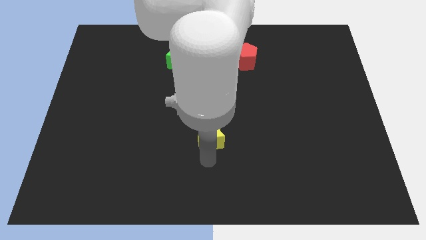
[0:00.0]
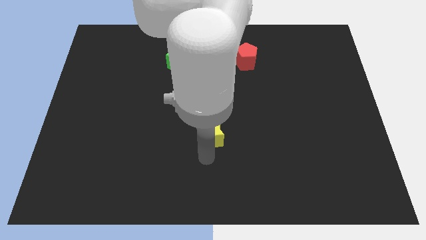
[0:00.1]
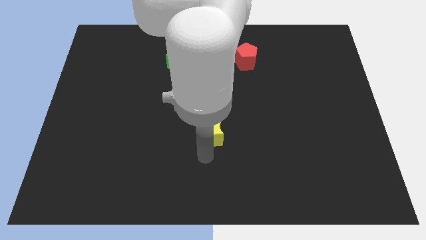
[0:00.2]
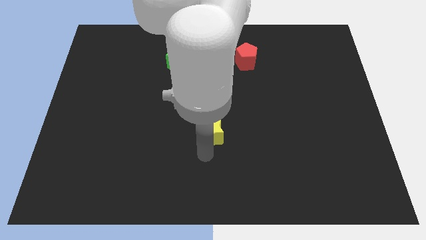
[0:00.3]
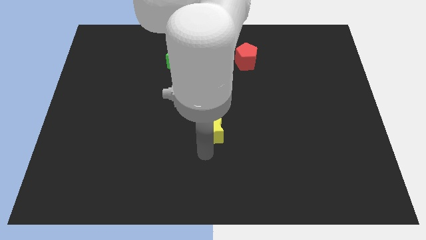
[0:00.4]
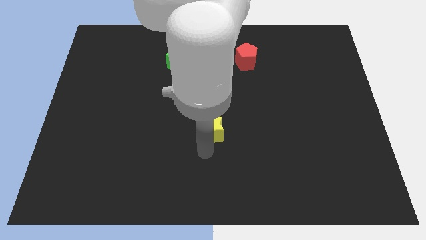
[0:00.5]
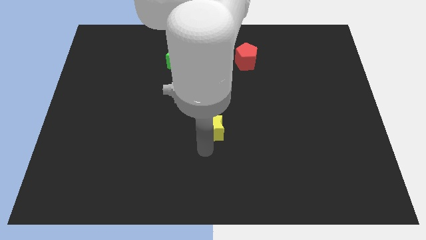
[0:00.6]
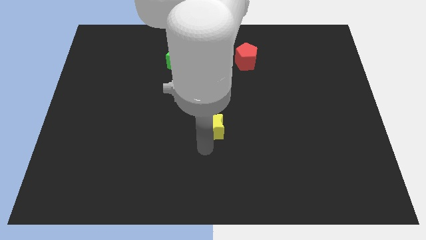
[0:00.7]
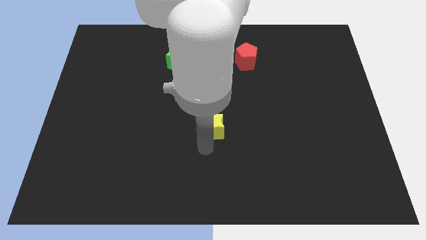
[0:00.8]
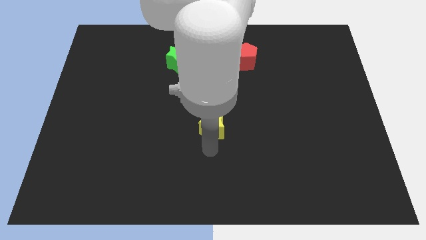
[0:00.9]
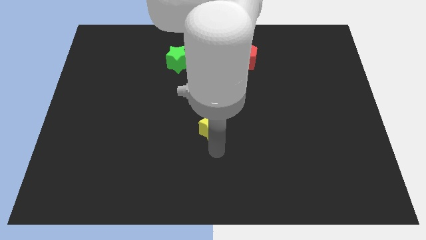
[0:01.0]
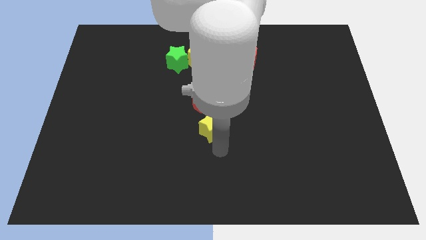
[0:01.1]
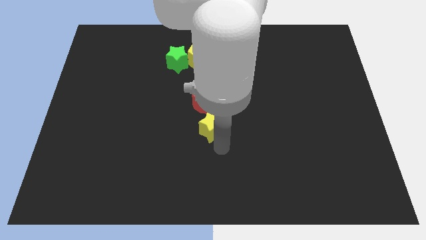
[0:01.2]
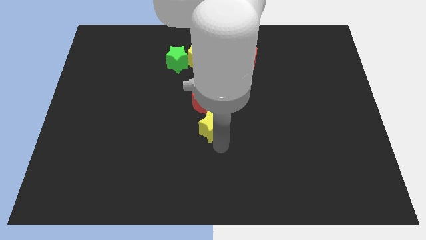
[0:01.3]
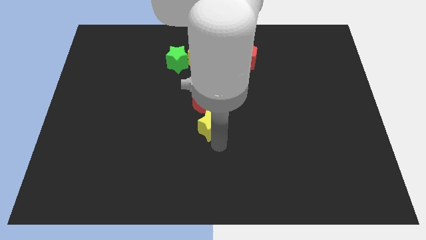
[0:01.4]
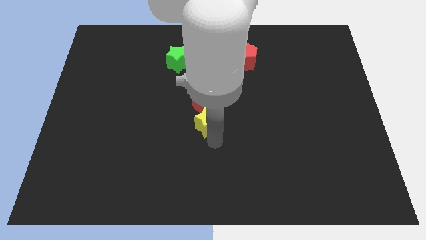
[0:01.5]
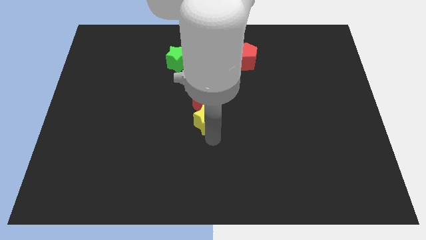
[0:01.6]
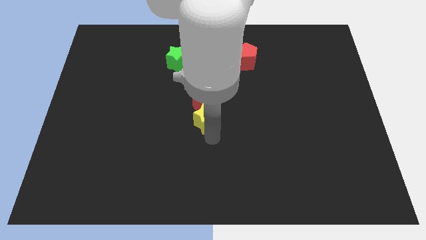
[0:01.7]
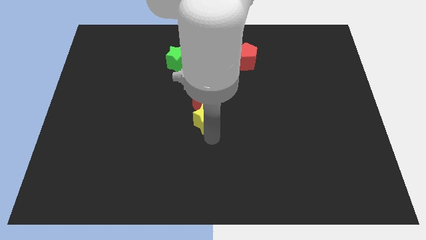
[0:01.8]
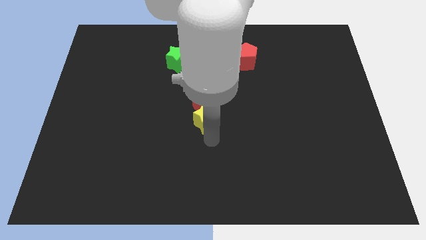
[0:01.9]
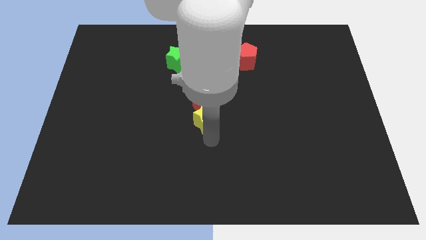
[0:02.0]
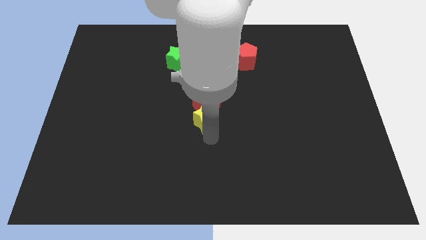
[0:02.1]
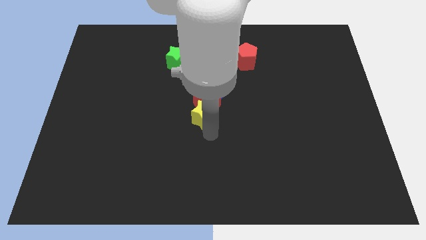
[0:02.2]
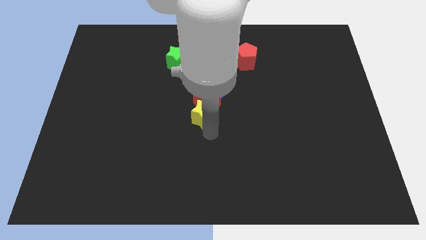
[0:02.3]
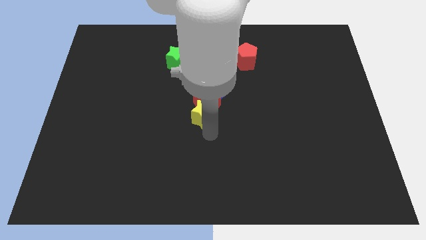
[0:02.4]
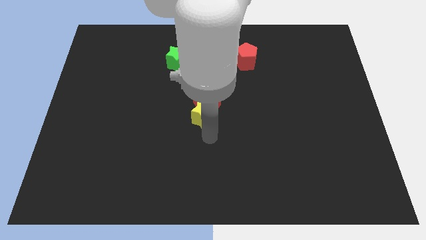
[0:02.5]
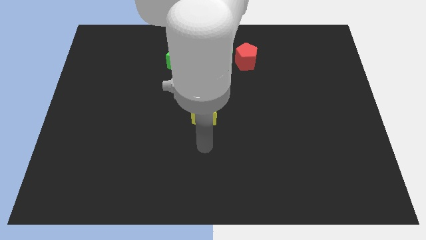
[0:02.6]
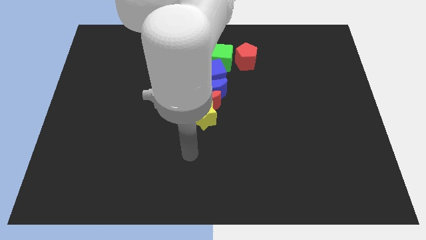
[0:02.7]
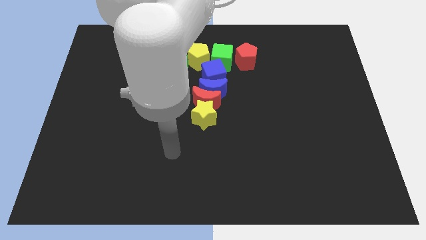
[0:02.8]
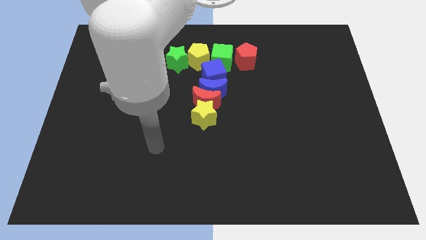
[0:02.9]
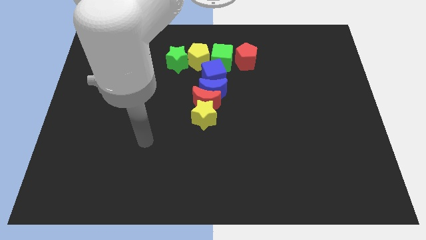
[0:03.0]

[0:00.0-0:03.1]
move the yellow star into red moon

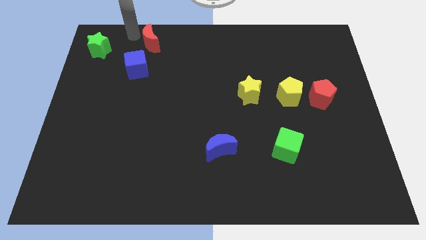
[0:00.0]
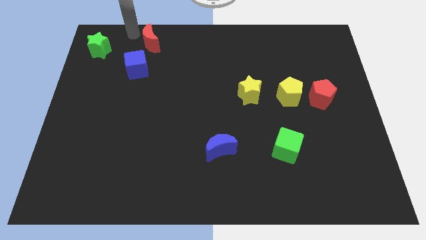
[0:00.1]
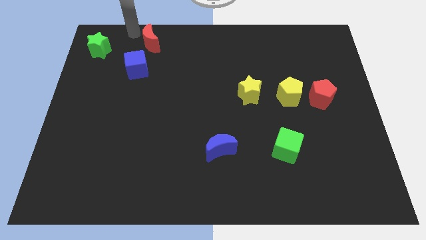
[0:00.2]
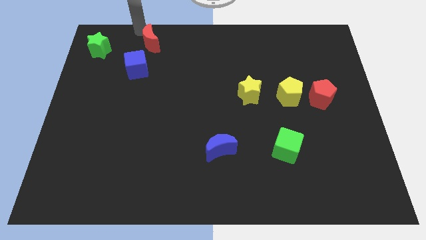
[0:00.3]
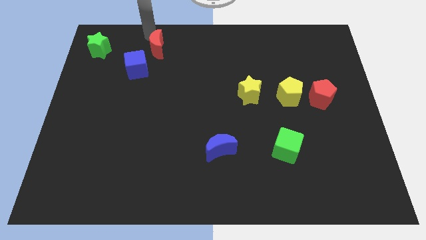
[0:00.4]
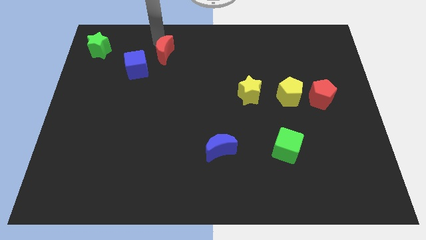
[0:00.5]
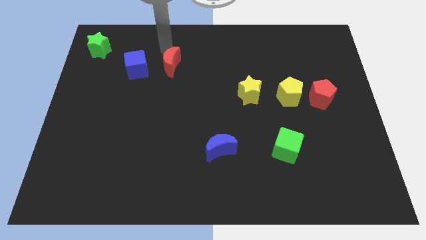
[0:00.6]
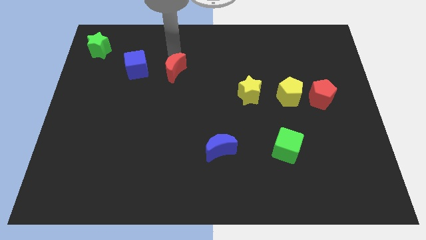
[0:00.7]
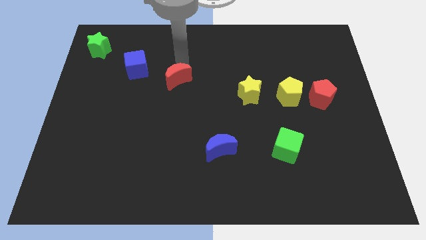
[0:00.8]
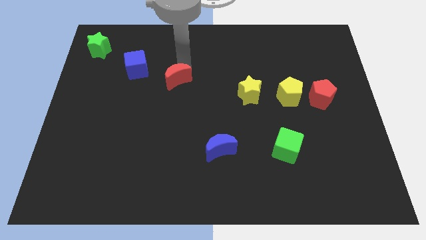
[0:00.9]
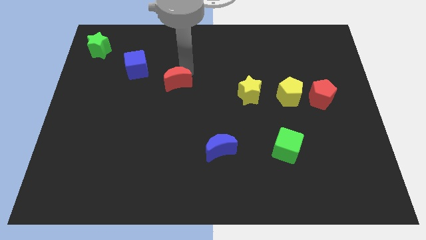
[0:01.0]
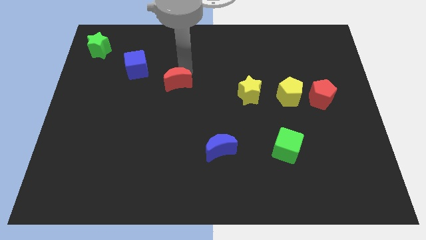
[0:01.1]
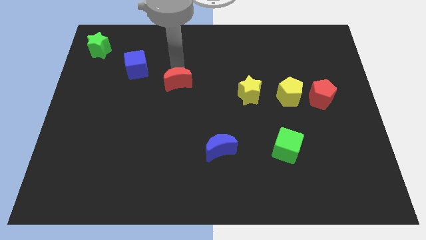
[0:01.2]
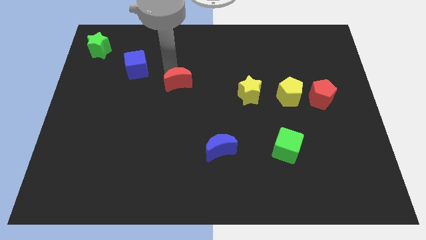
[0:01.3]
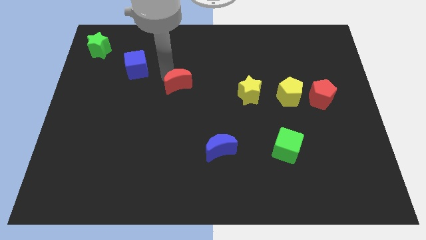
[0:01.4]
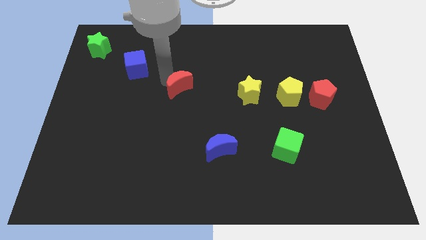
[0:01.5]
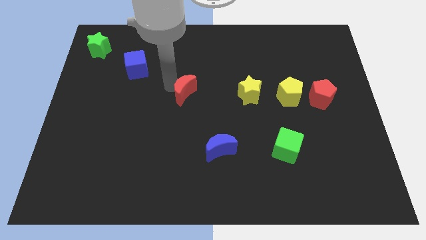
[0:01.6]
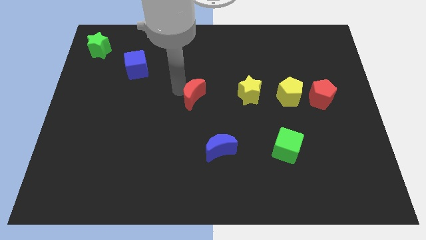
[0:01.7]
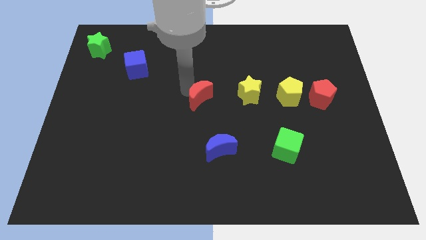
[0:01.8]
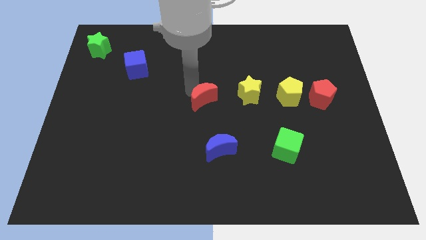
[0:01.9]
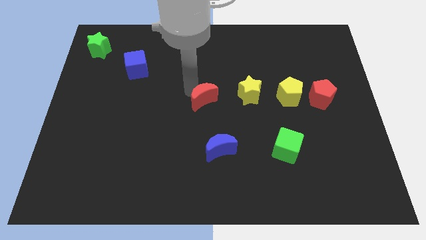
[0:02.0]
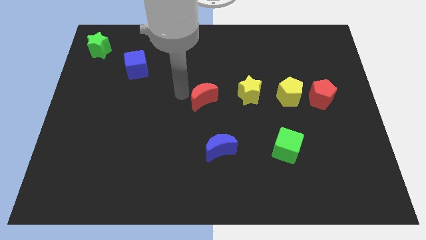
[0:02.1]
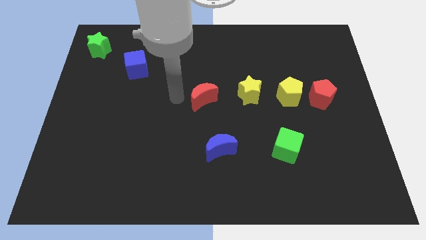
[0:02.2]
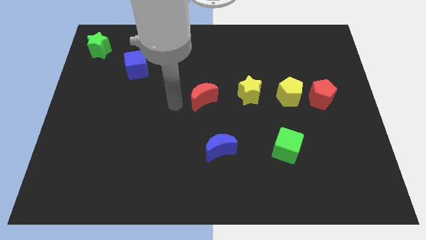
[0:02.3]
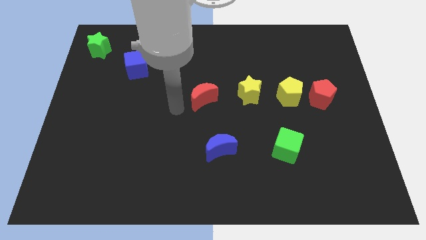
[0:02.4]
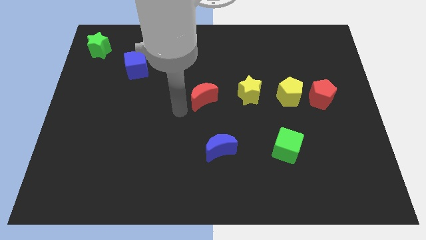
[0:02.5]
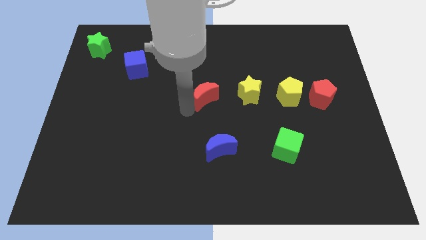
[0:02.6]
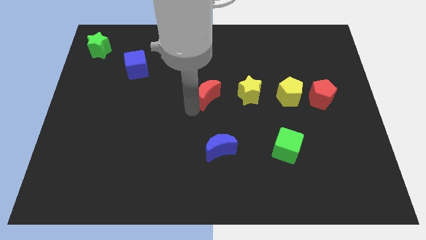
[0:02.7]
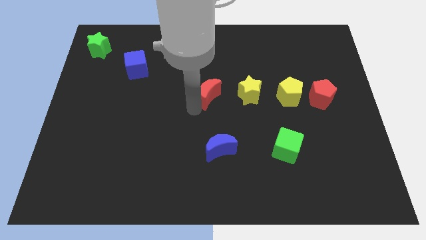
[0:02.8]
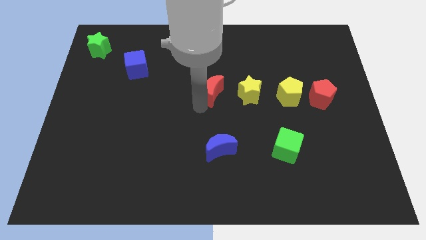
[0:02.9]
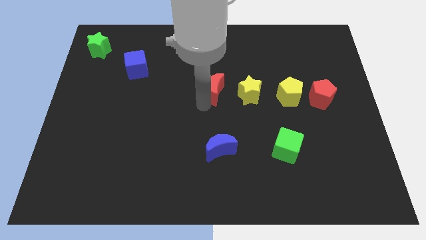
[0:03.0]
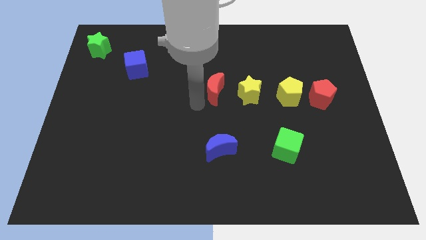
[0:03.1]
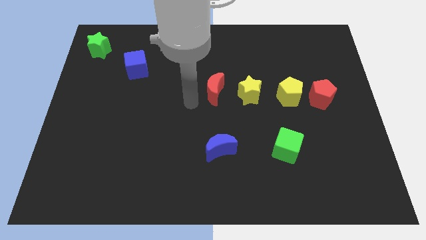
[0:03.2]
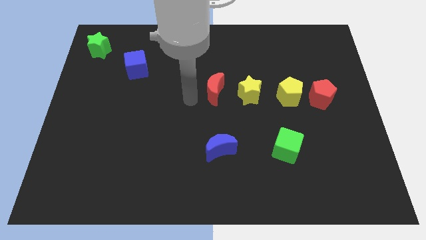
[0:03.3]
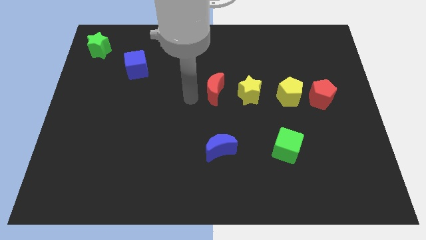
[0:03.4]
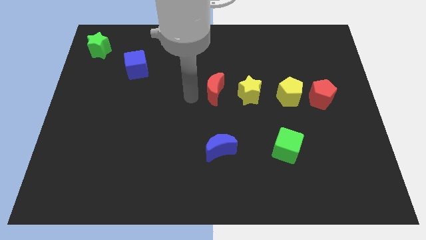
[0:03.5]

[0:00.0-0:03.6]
put red moon vertically above blue moon

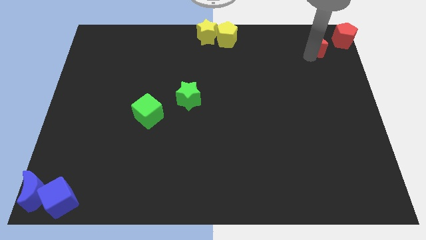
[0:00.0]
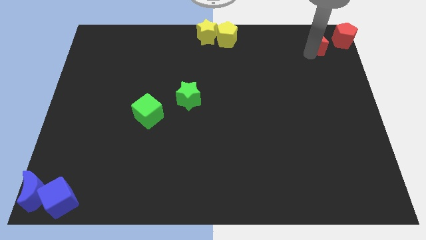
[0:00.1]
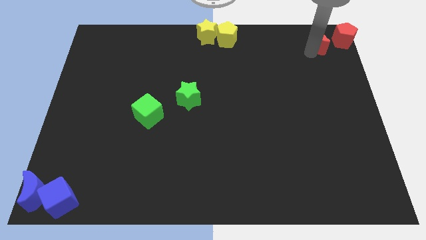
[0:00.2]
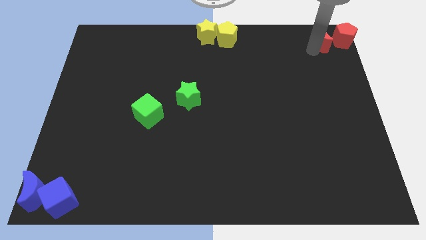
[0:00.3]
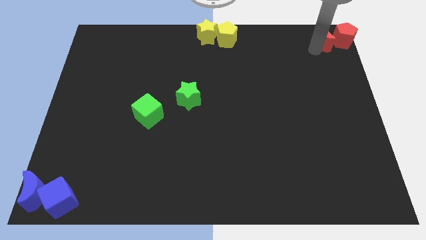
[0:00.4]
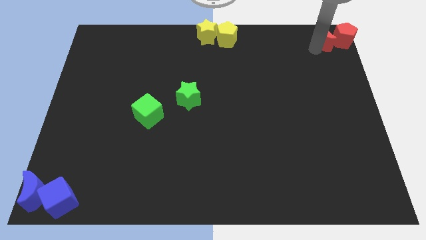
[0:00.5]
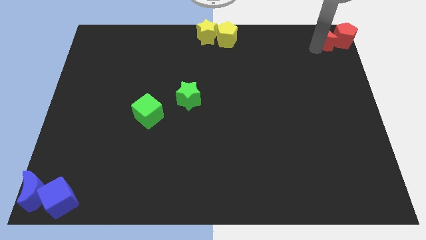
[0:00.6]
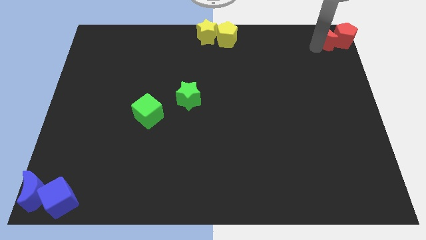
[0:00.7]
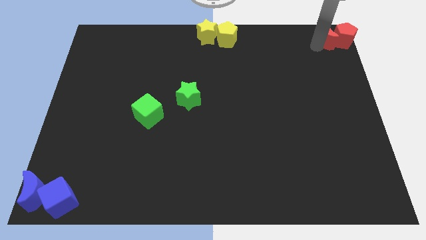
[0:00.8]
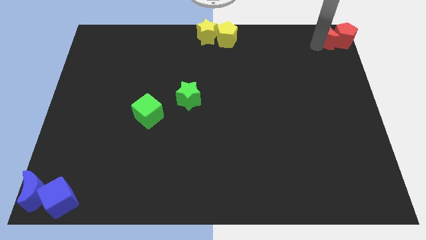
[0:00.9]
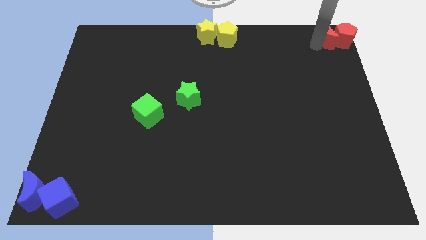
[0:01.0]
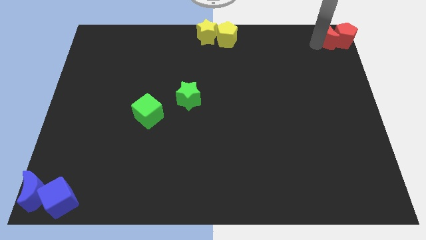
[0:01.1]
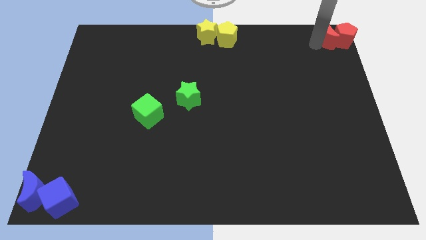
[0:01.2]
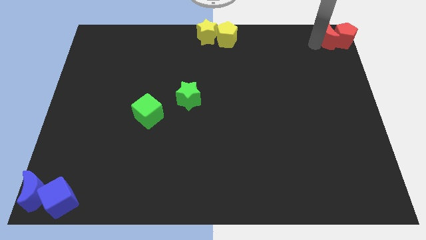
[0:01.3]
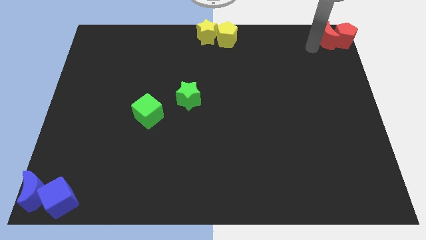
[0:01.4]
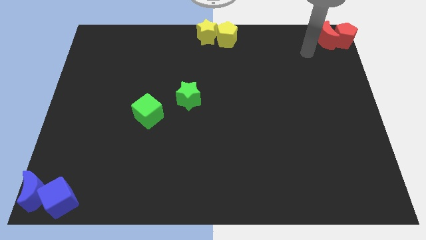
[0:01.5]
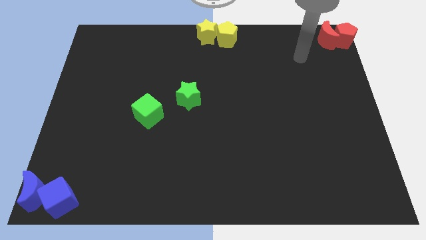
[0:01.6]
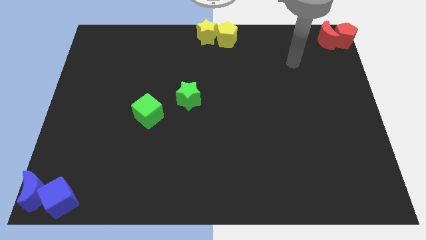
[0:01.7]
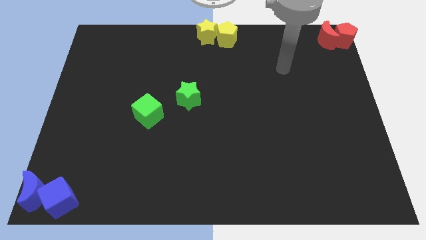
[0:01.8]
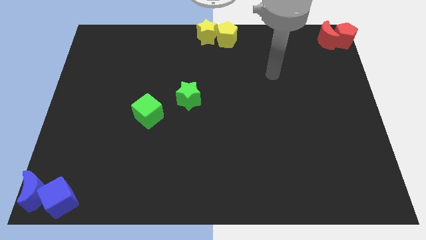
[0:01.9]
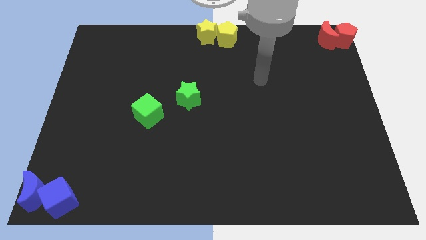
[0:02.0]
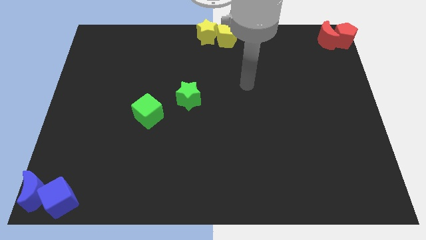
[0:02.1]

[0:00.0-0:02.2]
slide the red moon into the red pentagon
